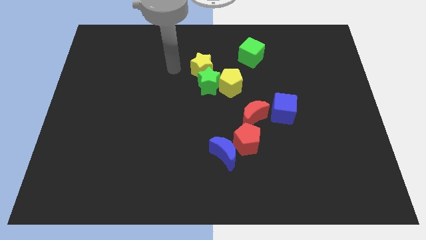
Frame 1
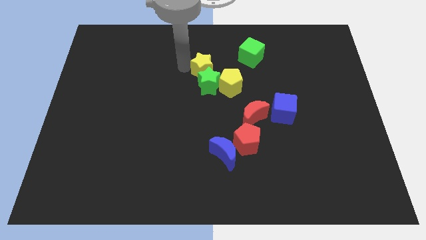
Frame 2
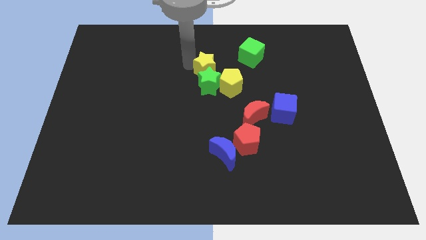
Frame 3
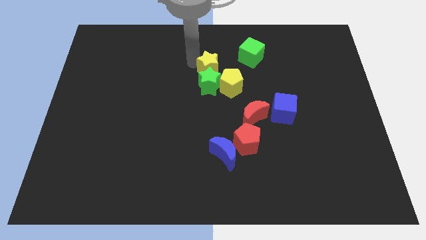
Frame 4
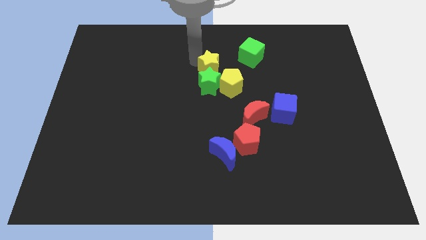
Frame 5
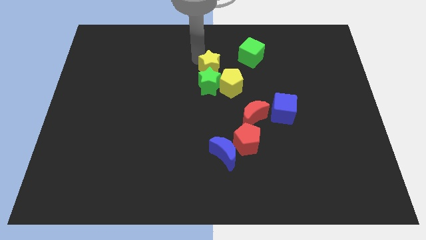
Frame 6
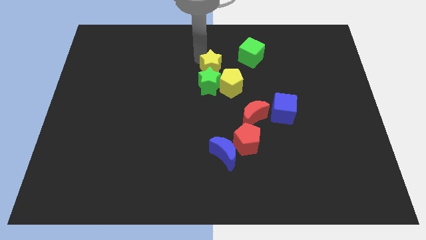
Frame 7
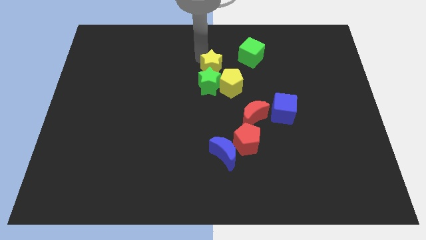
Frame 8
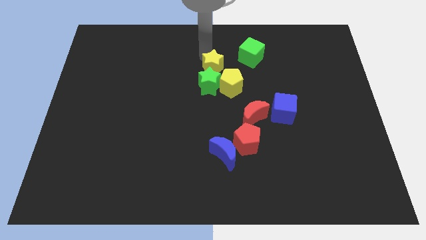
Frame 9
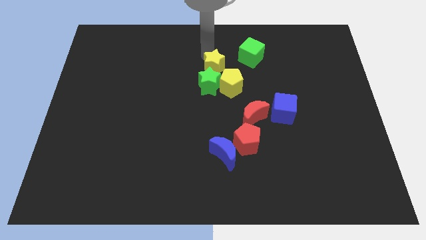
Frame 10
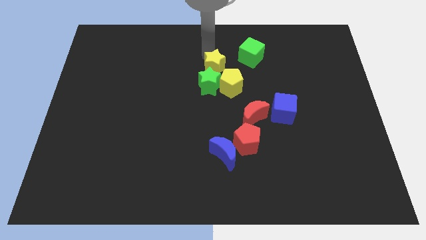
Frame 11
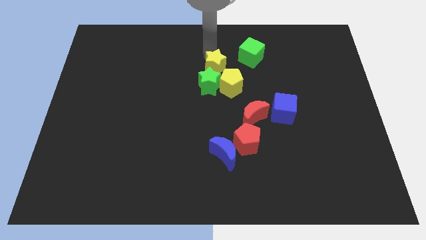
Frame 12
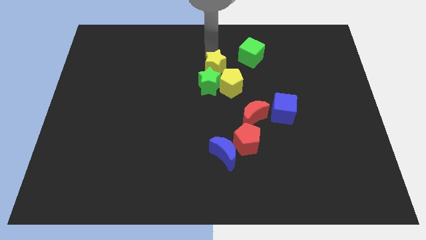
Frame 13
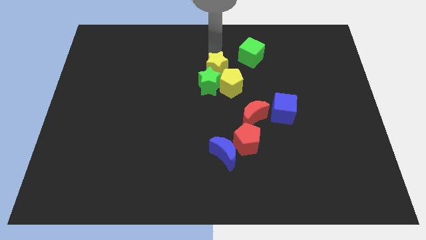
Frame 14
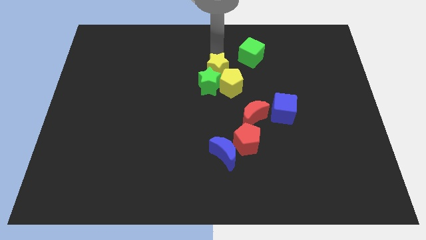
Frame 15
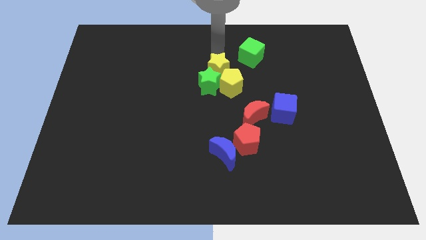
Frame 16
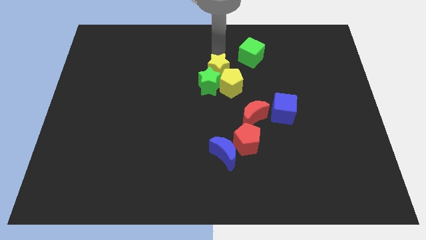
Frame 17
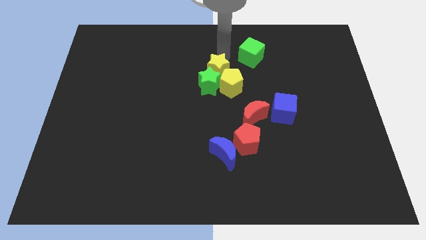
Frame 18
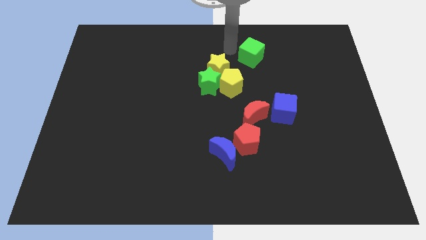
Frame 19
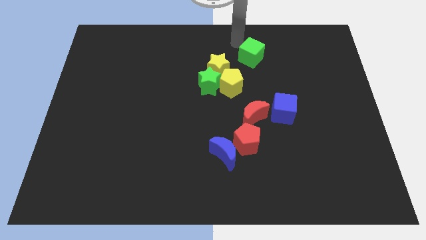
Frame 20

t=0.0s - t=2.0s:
move the yellow star into the top side of the green star and the yellow pentagon

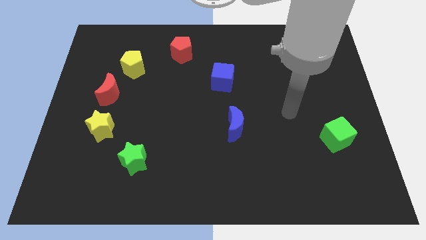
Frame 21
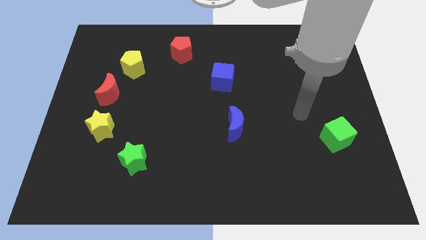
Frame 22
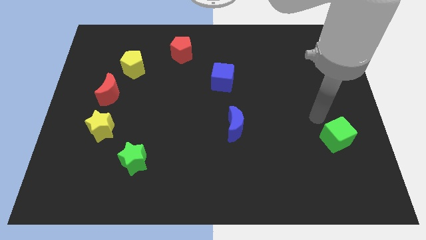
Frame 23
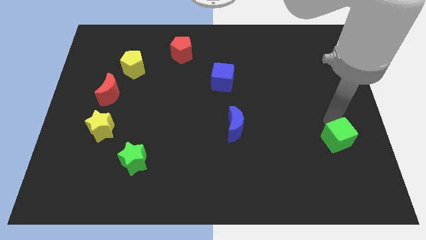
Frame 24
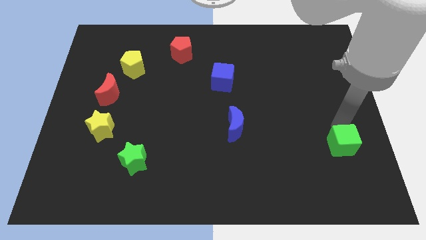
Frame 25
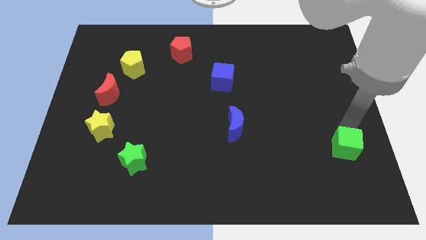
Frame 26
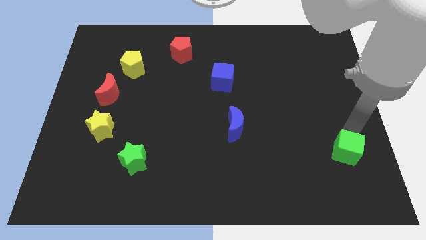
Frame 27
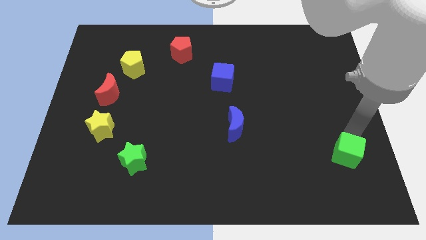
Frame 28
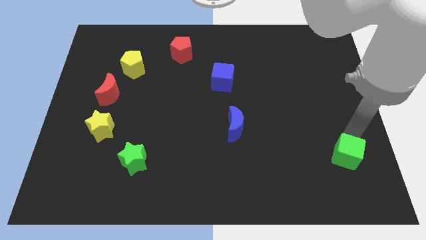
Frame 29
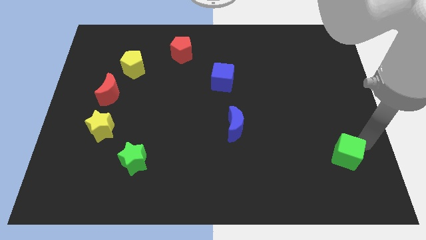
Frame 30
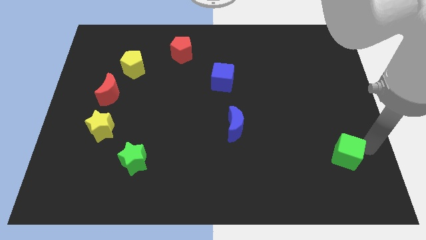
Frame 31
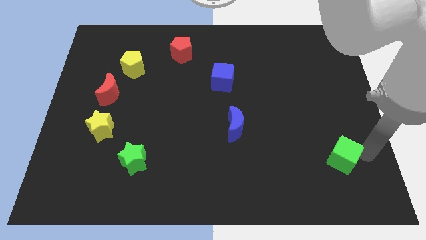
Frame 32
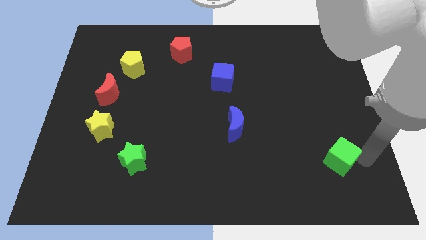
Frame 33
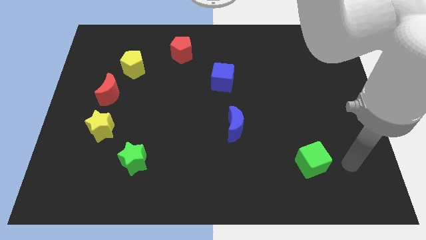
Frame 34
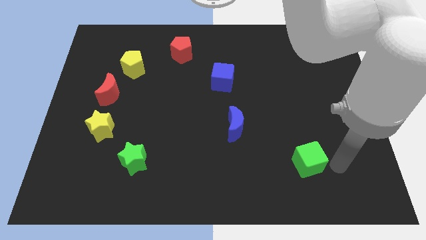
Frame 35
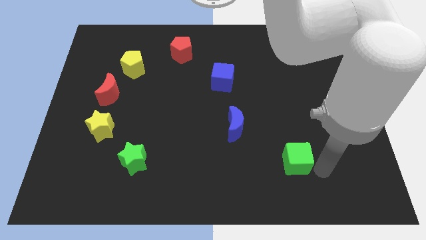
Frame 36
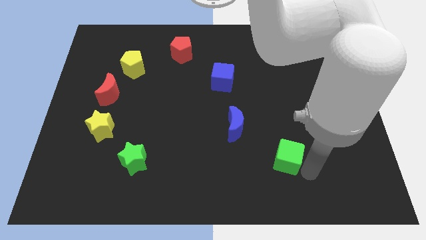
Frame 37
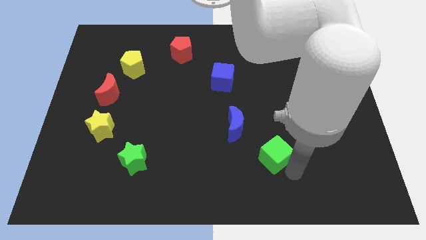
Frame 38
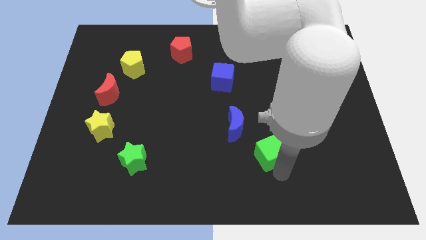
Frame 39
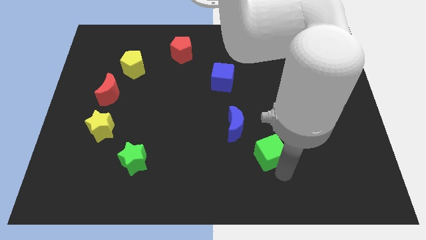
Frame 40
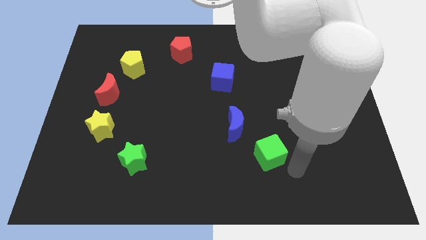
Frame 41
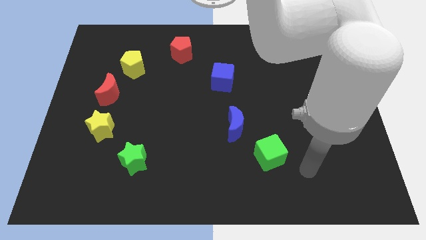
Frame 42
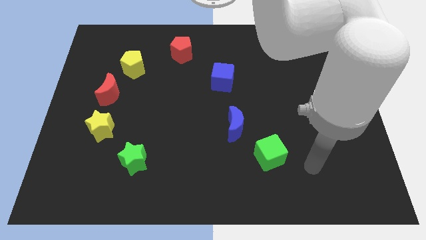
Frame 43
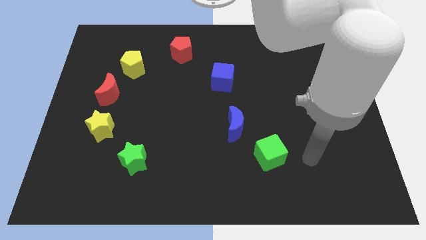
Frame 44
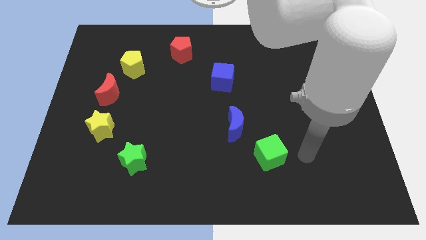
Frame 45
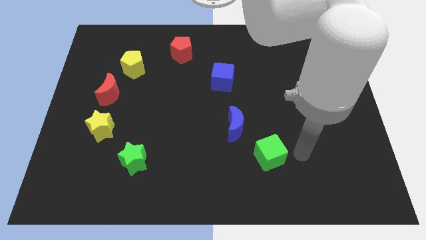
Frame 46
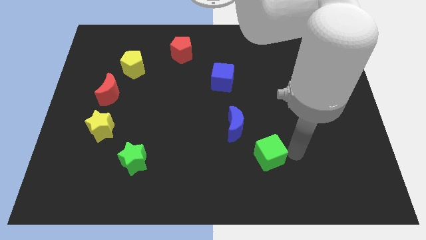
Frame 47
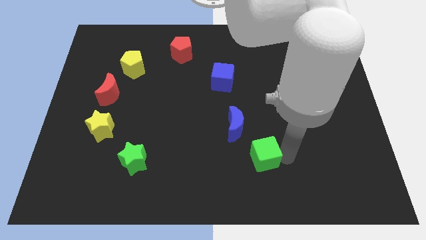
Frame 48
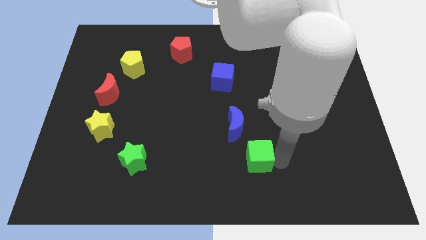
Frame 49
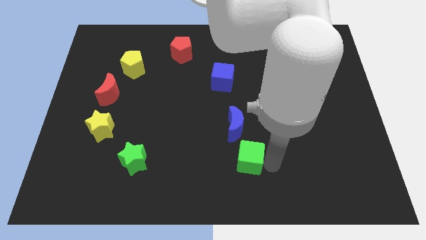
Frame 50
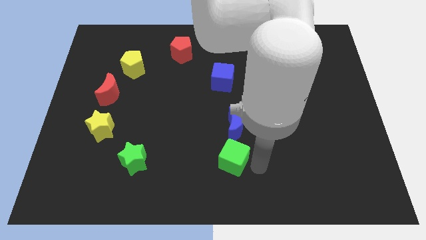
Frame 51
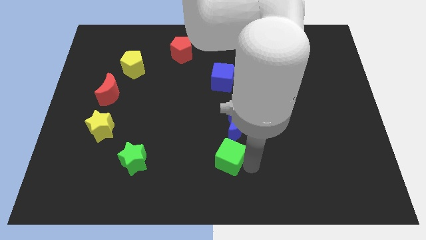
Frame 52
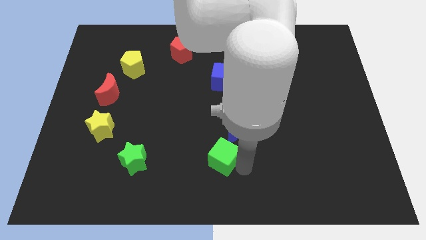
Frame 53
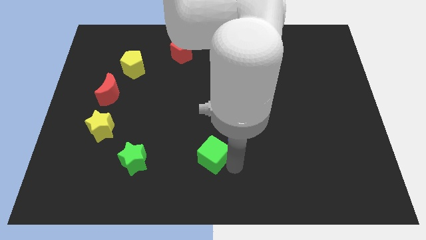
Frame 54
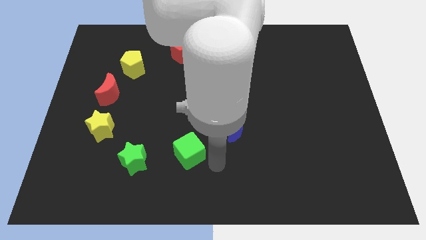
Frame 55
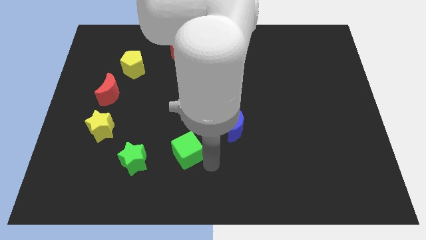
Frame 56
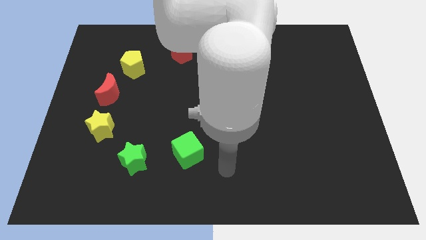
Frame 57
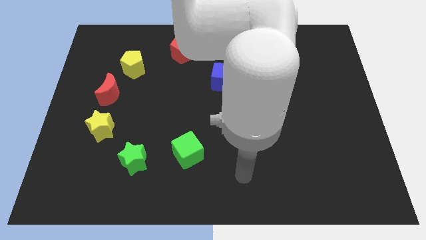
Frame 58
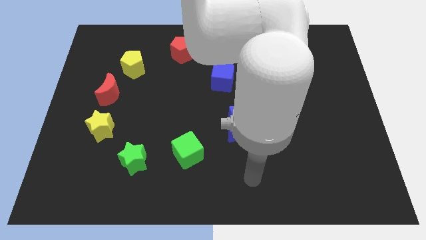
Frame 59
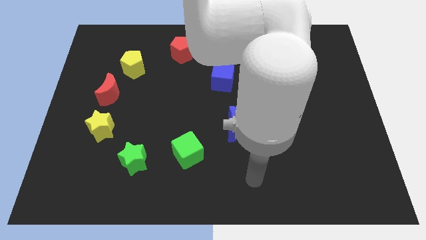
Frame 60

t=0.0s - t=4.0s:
move green cube towards the right of the green star

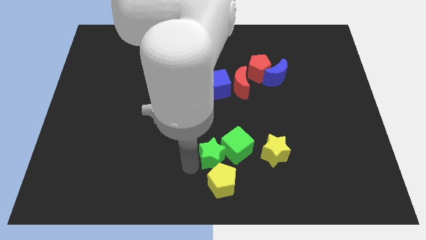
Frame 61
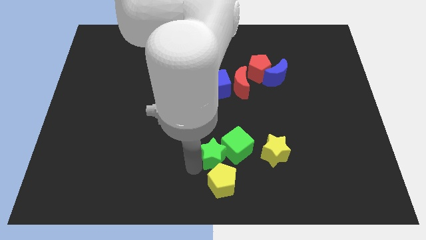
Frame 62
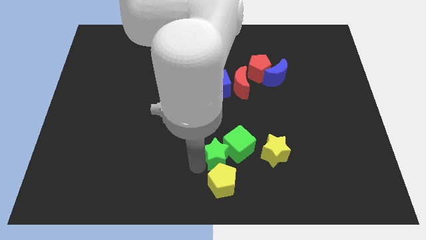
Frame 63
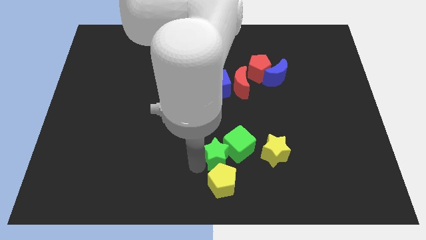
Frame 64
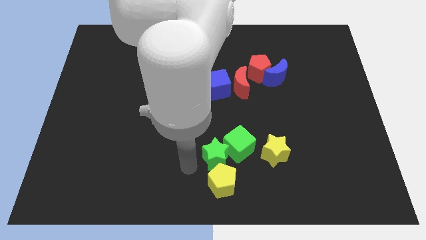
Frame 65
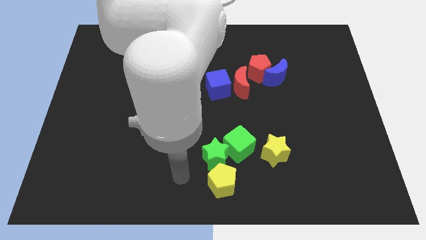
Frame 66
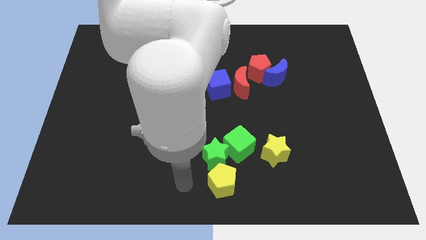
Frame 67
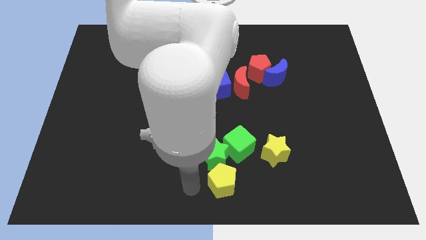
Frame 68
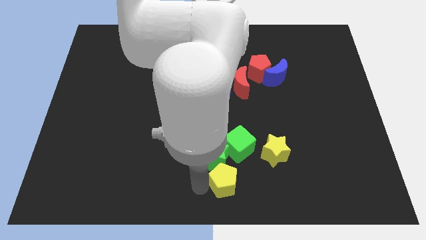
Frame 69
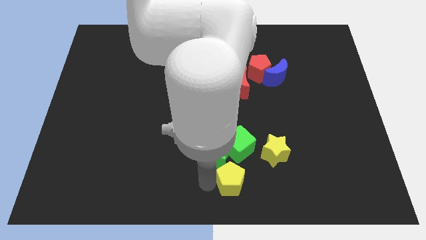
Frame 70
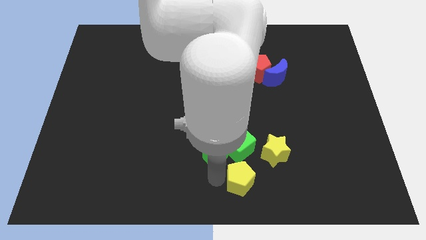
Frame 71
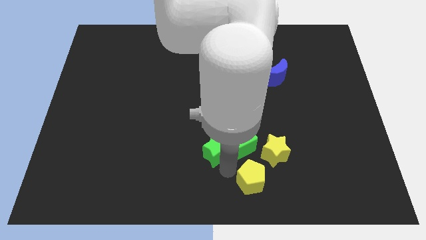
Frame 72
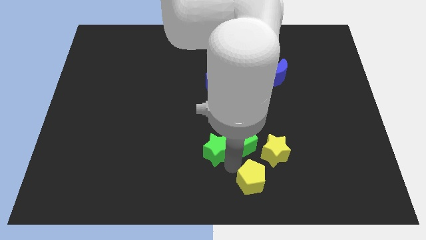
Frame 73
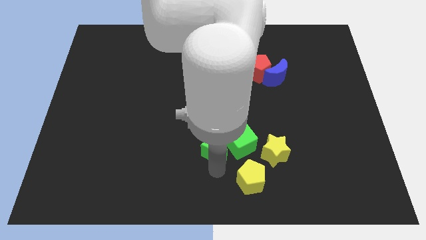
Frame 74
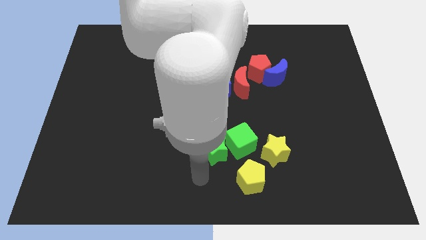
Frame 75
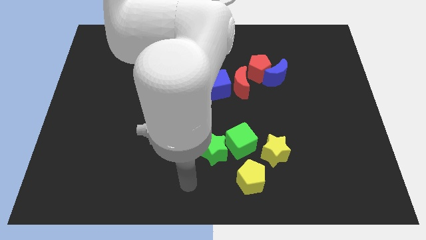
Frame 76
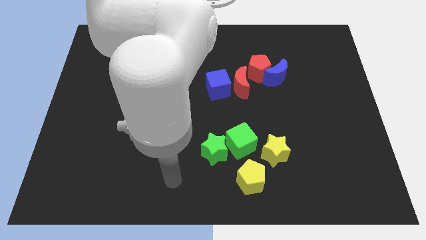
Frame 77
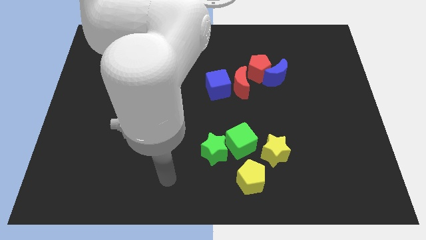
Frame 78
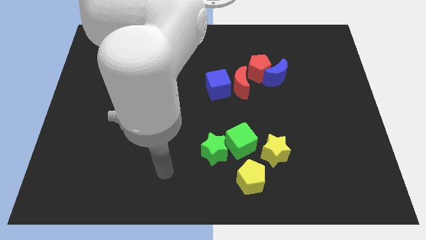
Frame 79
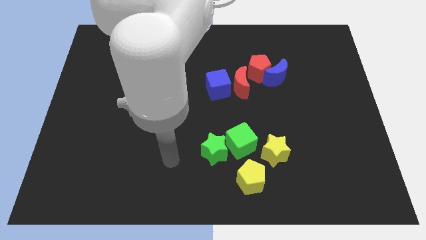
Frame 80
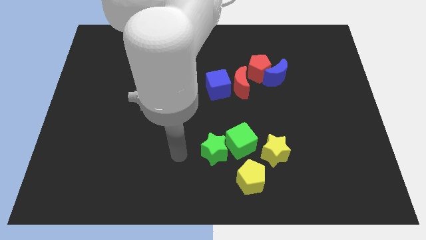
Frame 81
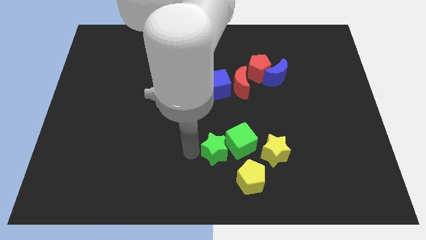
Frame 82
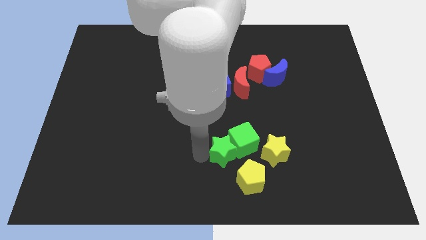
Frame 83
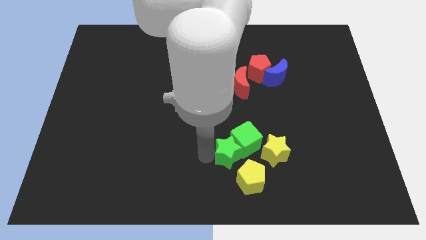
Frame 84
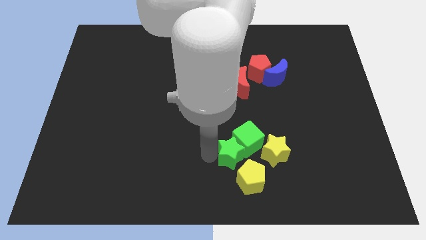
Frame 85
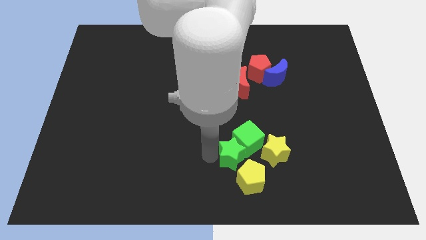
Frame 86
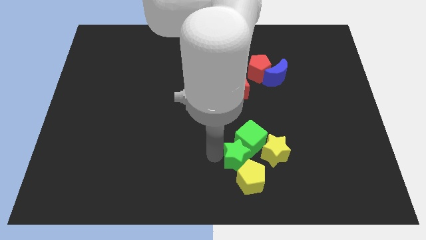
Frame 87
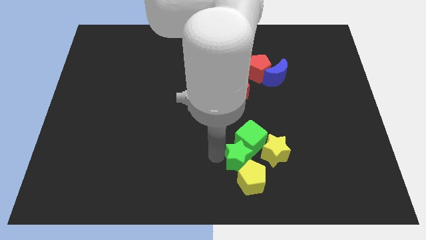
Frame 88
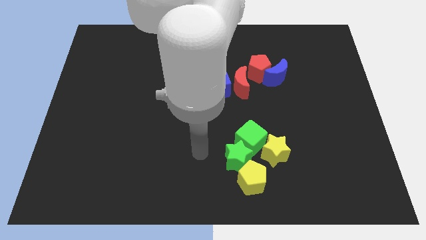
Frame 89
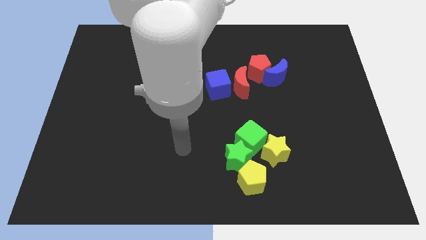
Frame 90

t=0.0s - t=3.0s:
push green star slightly down
